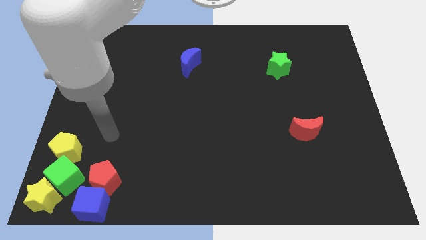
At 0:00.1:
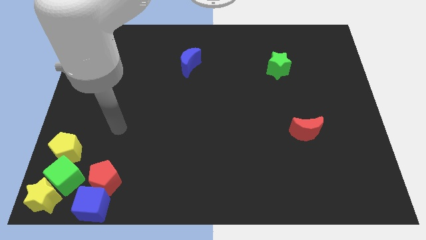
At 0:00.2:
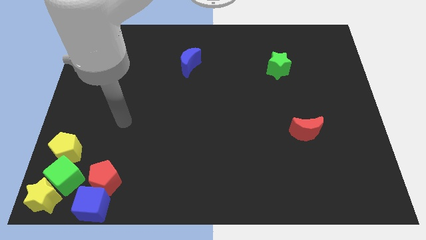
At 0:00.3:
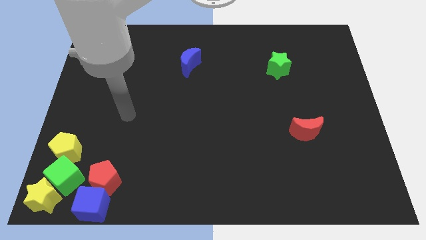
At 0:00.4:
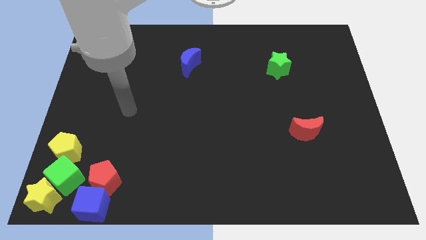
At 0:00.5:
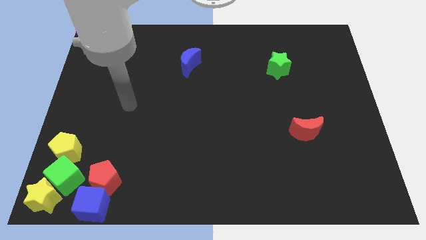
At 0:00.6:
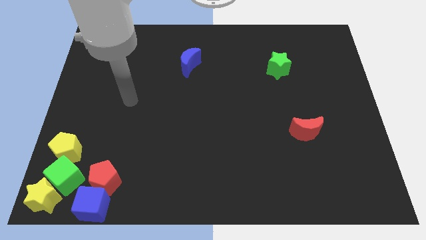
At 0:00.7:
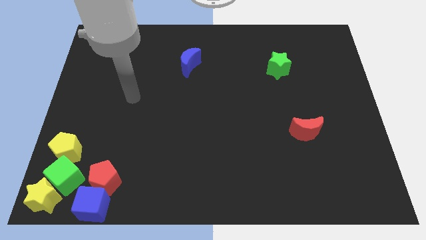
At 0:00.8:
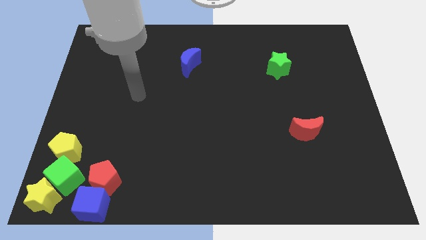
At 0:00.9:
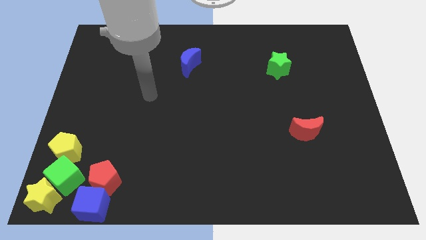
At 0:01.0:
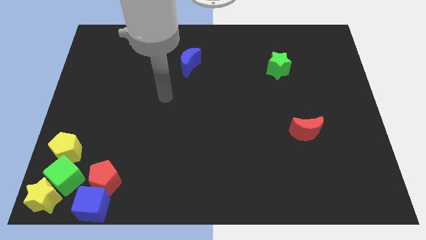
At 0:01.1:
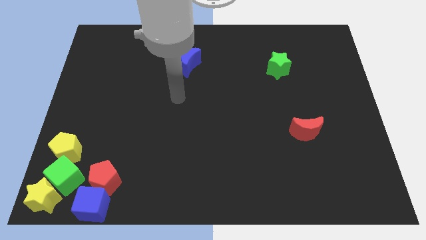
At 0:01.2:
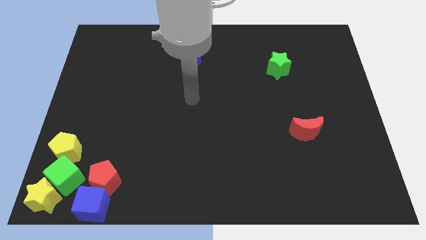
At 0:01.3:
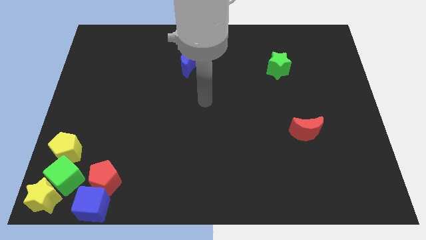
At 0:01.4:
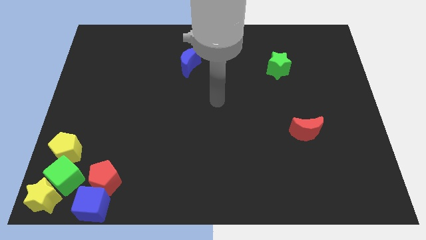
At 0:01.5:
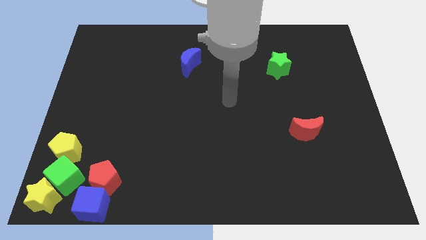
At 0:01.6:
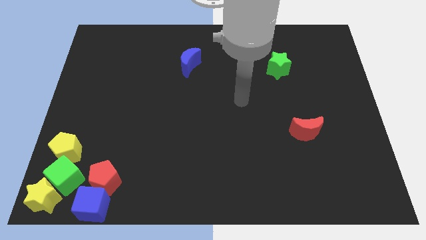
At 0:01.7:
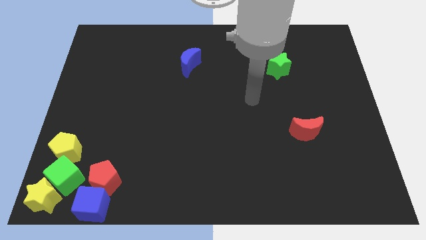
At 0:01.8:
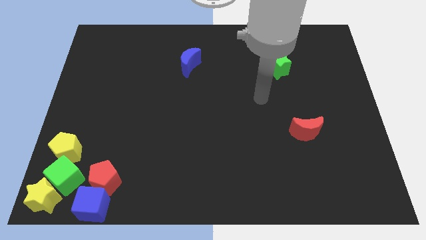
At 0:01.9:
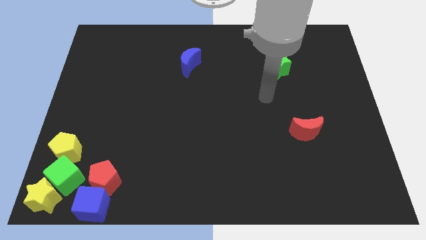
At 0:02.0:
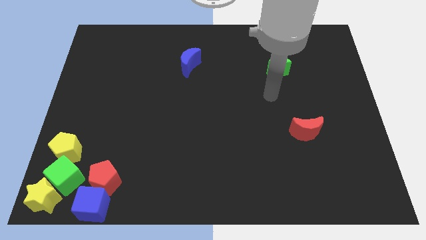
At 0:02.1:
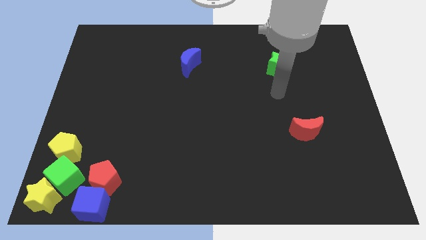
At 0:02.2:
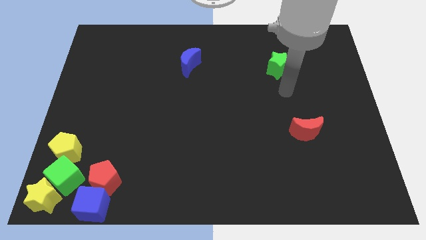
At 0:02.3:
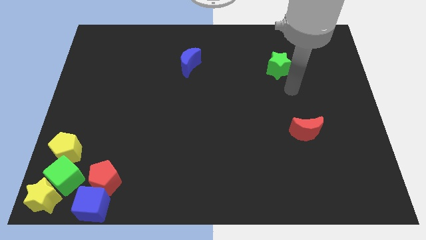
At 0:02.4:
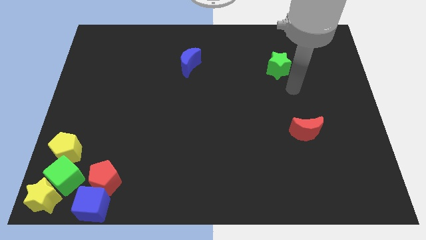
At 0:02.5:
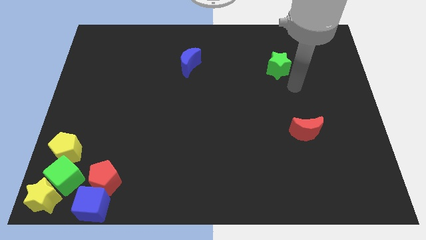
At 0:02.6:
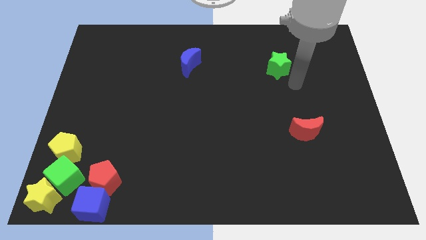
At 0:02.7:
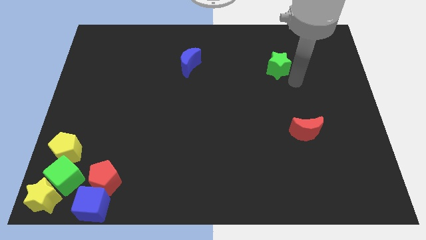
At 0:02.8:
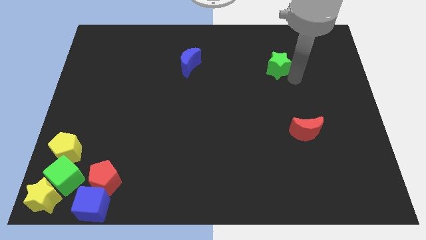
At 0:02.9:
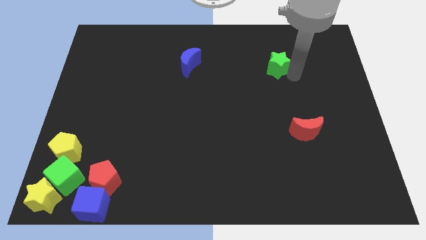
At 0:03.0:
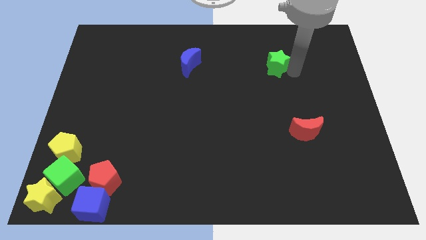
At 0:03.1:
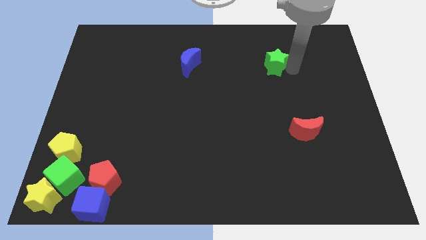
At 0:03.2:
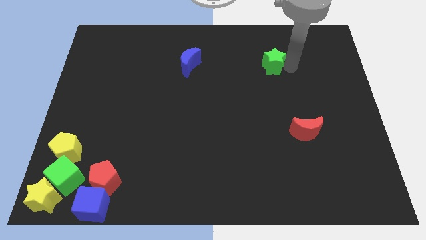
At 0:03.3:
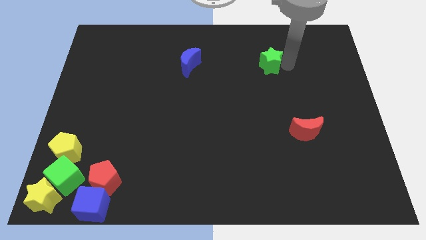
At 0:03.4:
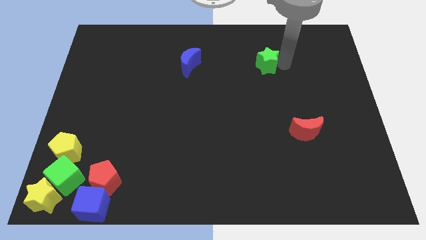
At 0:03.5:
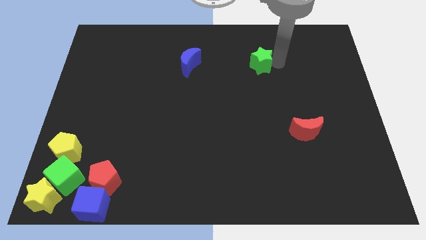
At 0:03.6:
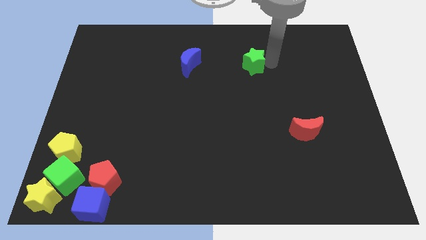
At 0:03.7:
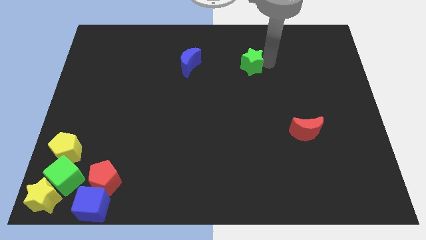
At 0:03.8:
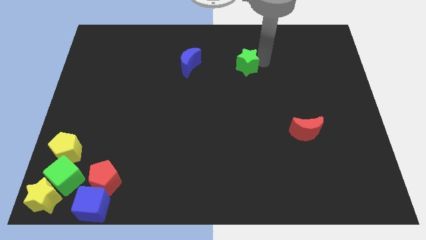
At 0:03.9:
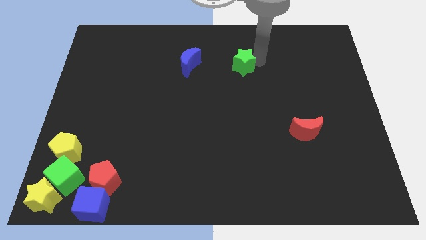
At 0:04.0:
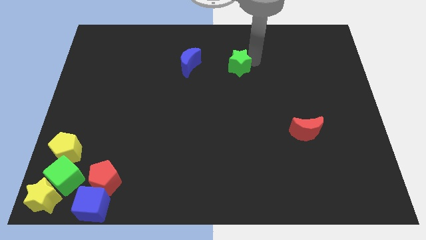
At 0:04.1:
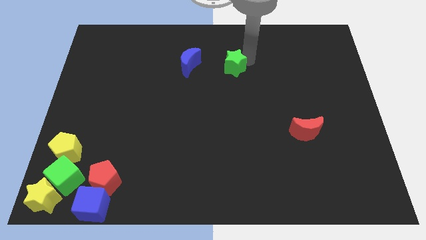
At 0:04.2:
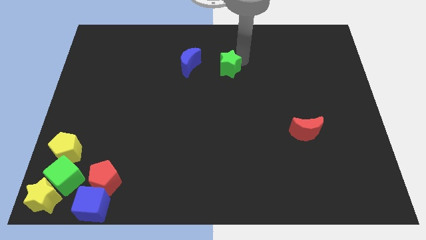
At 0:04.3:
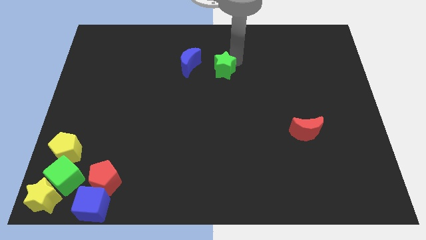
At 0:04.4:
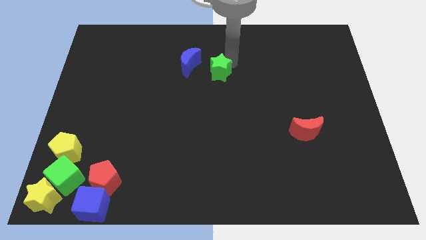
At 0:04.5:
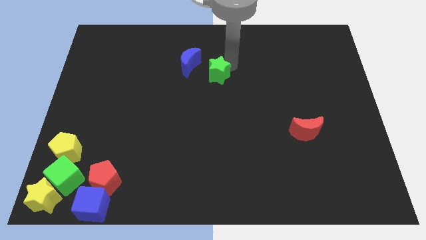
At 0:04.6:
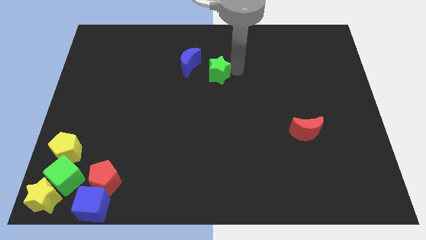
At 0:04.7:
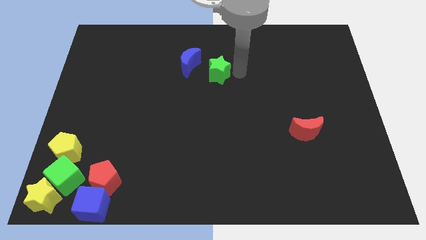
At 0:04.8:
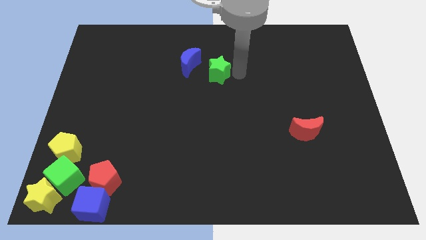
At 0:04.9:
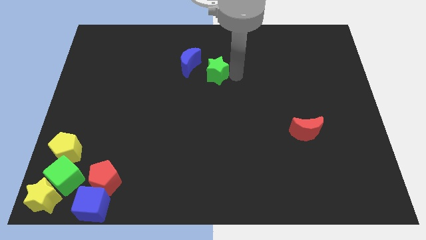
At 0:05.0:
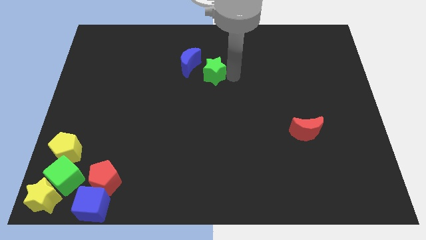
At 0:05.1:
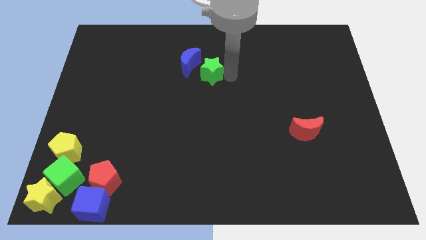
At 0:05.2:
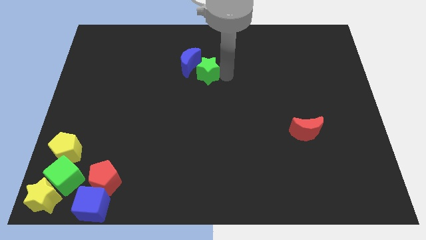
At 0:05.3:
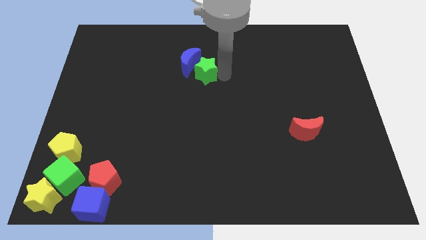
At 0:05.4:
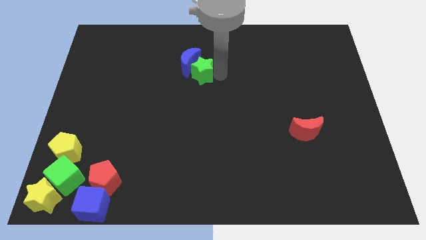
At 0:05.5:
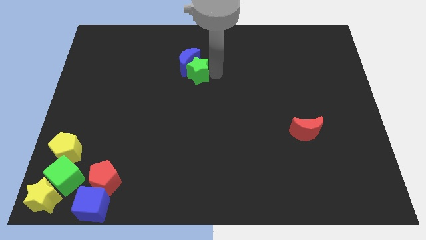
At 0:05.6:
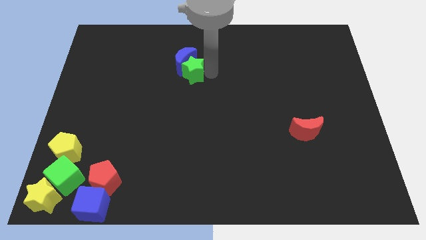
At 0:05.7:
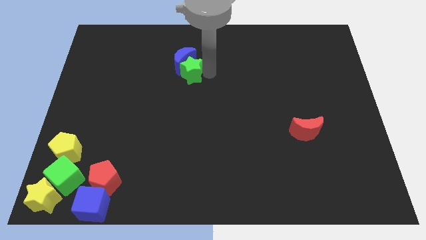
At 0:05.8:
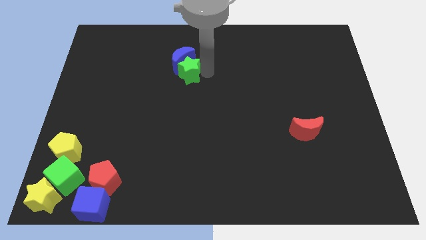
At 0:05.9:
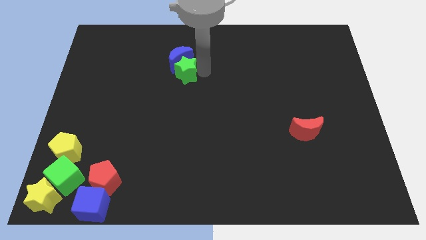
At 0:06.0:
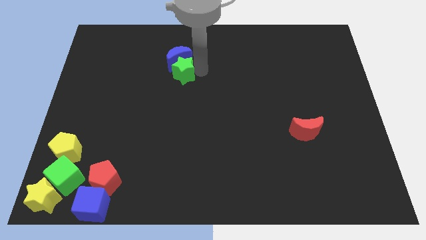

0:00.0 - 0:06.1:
move the green star close into the blue moon

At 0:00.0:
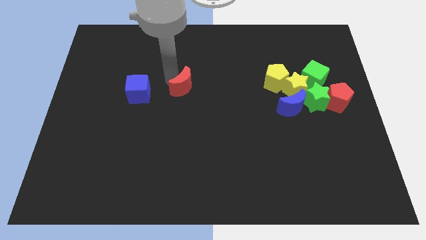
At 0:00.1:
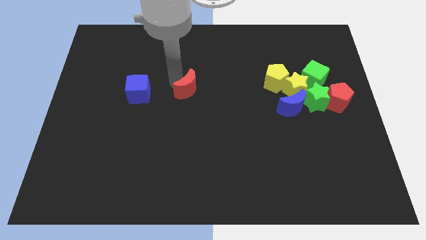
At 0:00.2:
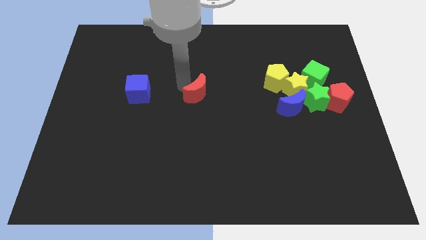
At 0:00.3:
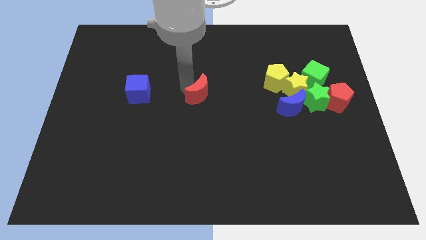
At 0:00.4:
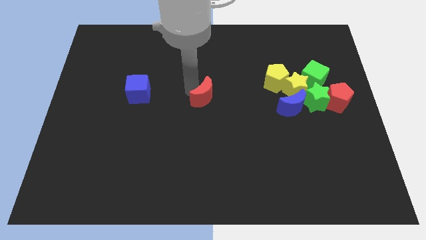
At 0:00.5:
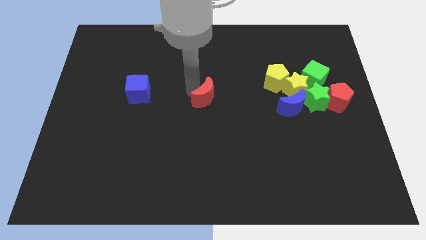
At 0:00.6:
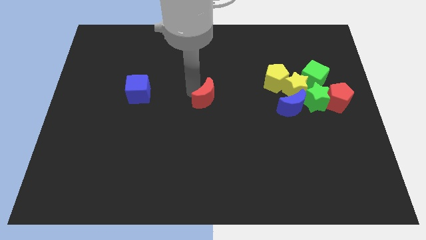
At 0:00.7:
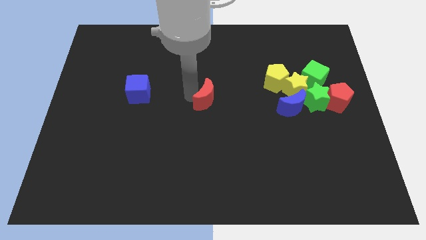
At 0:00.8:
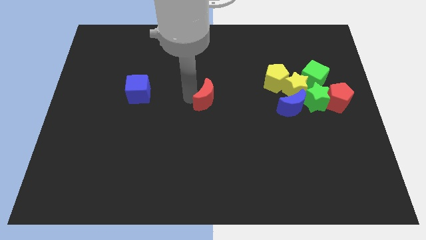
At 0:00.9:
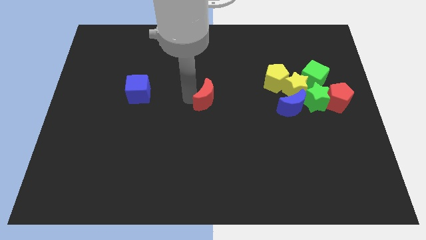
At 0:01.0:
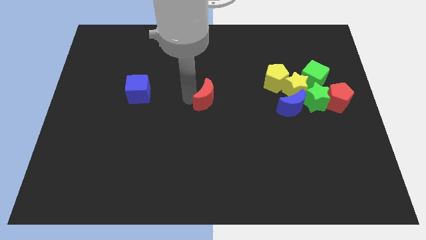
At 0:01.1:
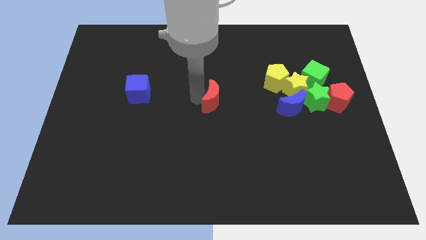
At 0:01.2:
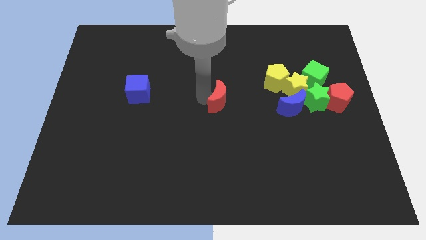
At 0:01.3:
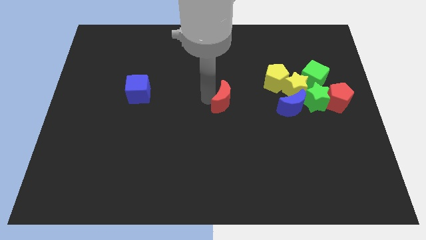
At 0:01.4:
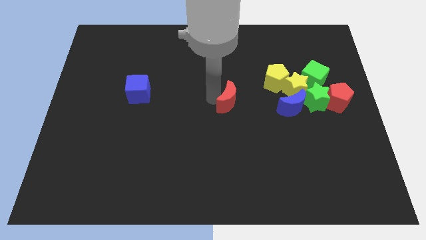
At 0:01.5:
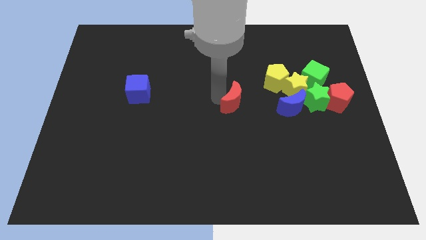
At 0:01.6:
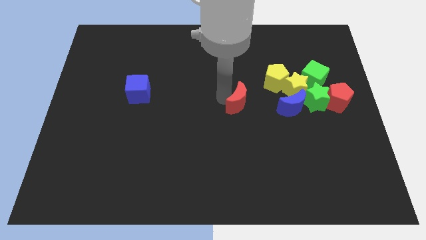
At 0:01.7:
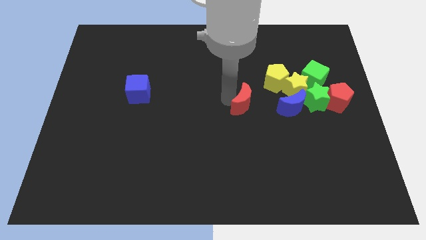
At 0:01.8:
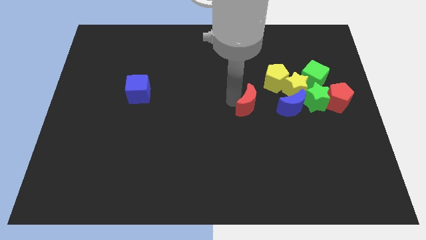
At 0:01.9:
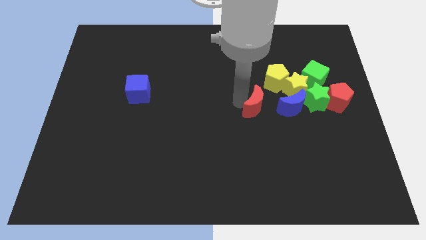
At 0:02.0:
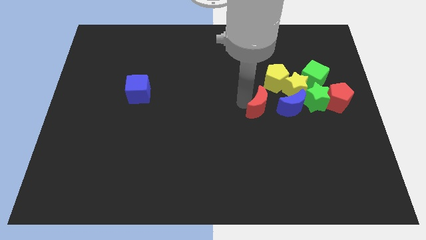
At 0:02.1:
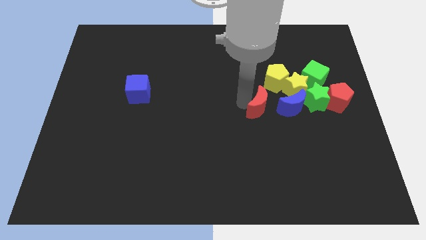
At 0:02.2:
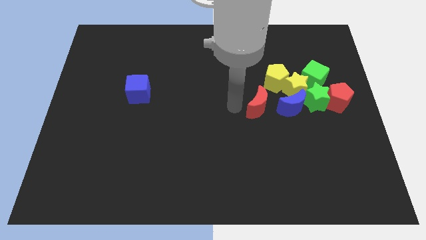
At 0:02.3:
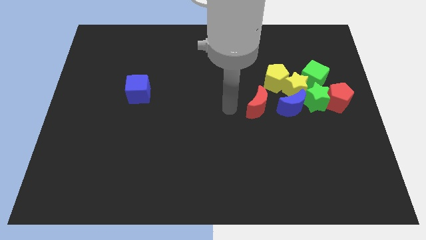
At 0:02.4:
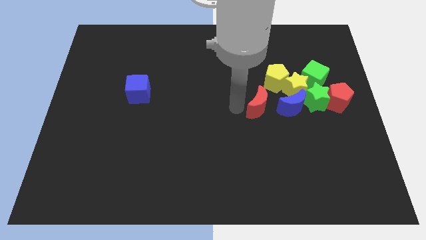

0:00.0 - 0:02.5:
move the red moon to the left of the blue moon

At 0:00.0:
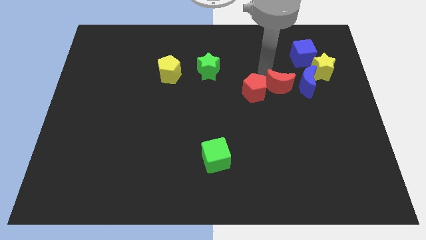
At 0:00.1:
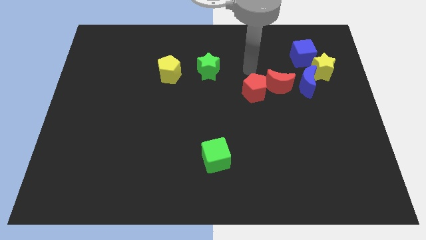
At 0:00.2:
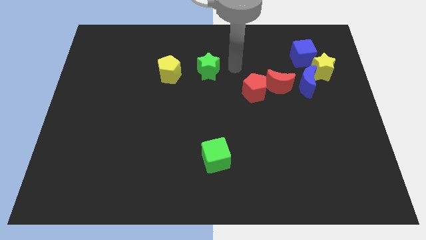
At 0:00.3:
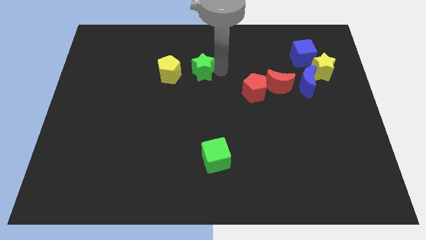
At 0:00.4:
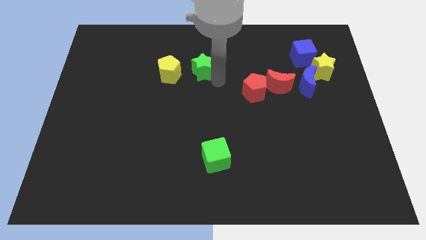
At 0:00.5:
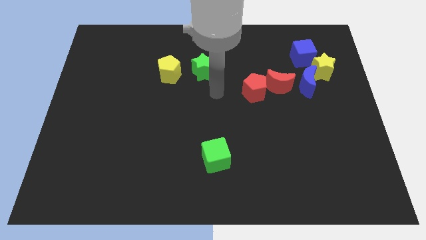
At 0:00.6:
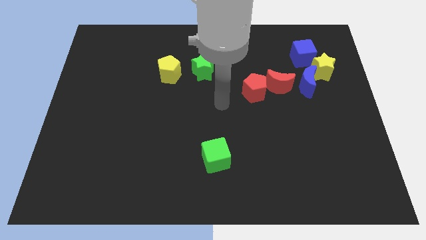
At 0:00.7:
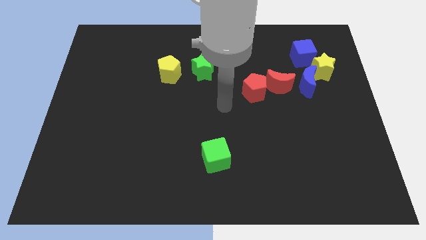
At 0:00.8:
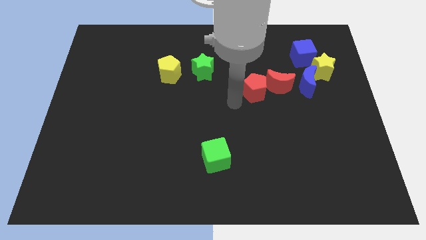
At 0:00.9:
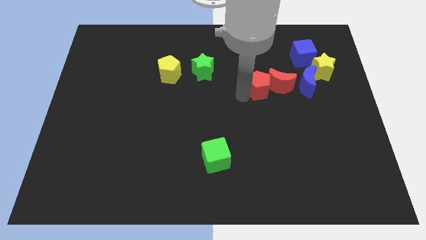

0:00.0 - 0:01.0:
move your arm away from the red moon
